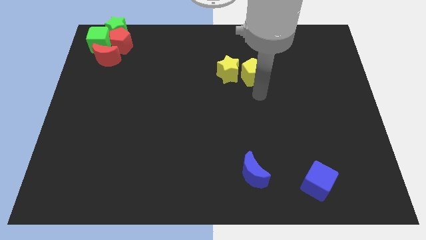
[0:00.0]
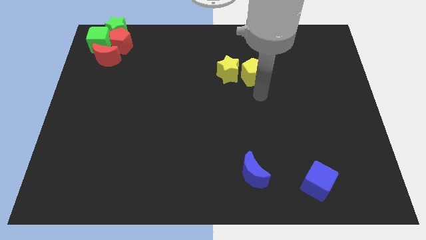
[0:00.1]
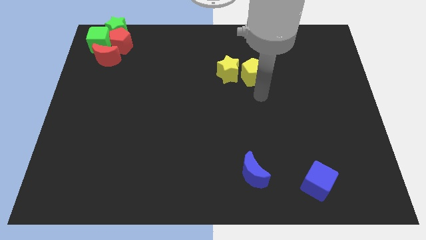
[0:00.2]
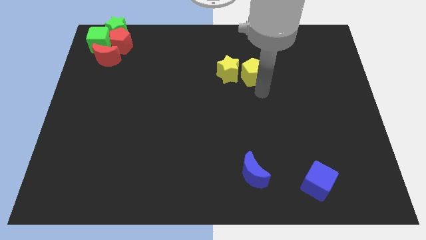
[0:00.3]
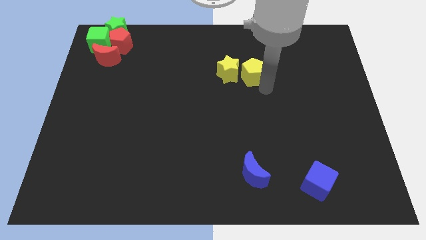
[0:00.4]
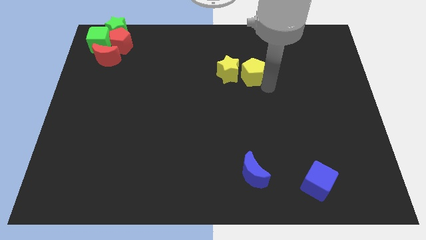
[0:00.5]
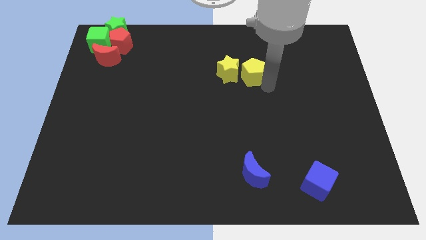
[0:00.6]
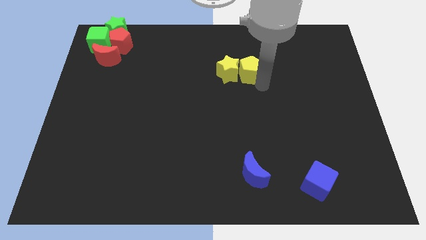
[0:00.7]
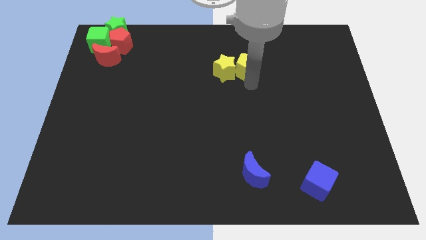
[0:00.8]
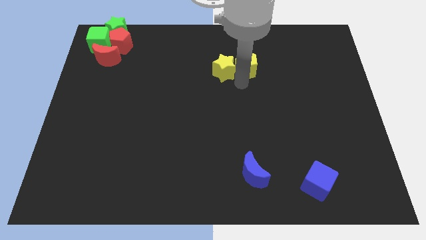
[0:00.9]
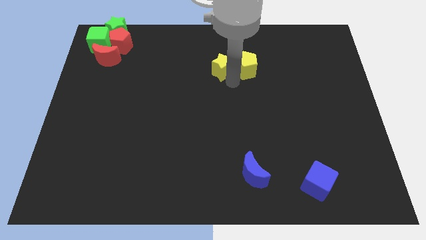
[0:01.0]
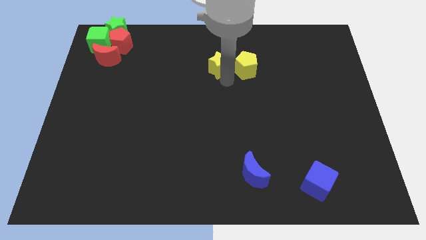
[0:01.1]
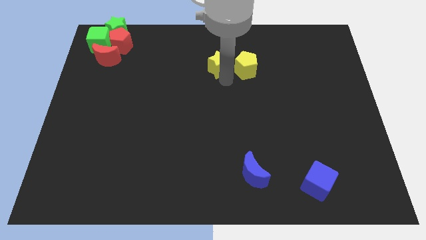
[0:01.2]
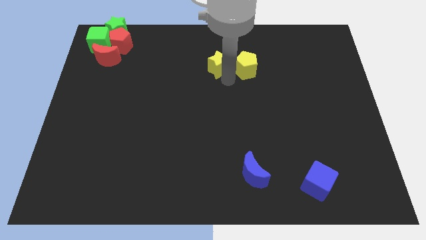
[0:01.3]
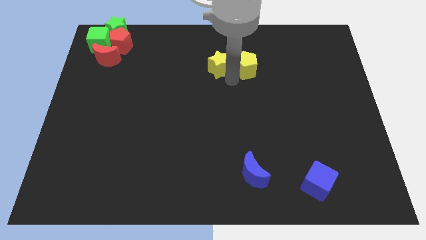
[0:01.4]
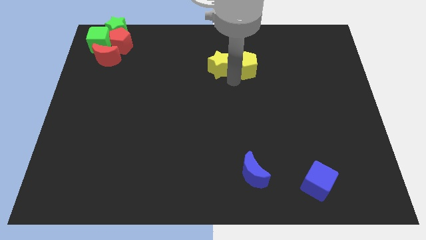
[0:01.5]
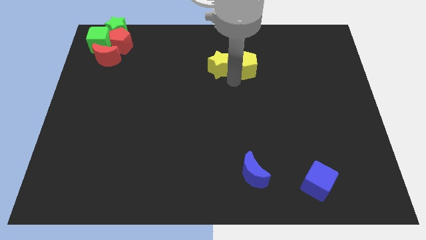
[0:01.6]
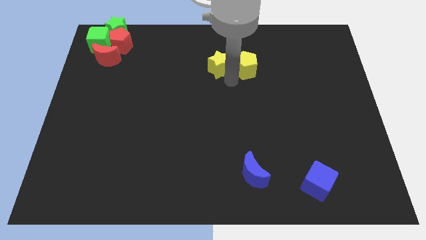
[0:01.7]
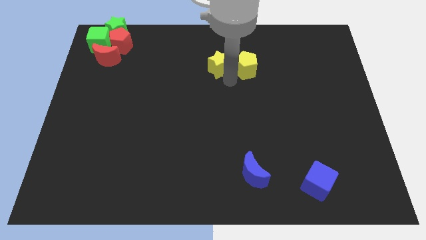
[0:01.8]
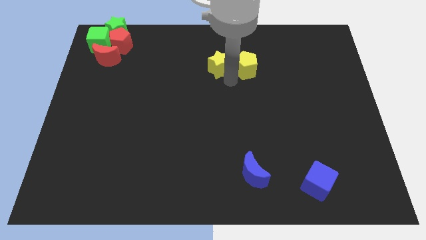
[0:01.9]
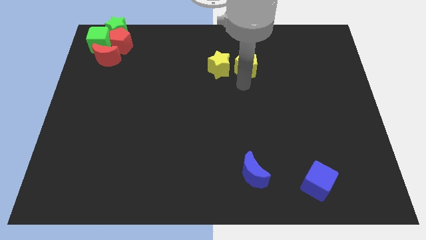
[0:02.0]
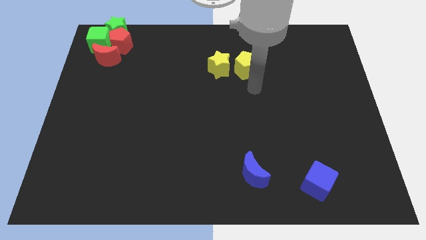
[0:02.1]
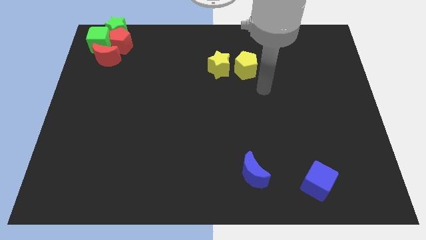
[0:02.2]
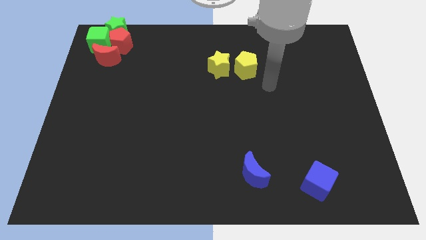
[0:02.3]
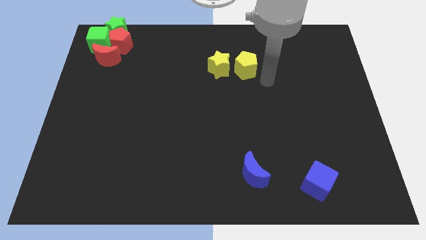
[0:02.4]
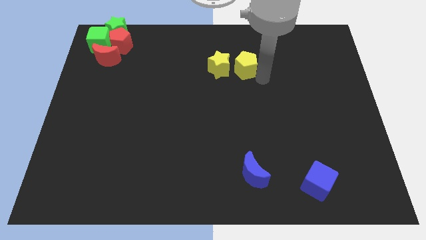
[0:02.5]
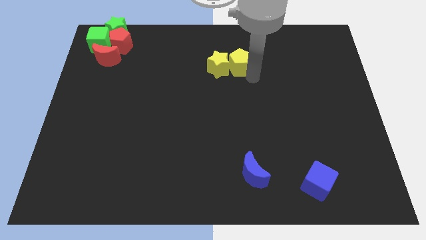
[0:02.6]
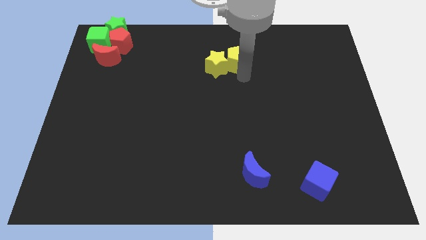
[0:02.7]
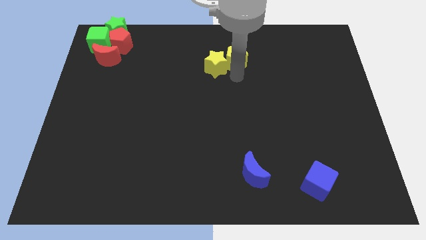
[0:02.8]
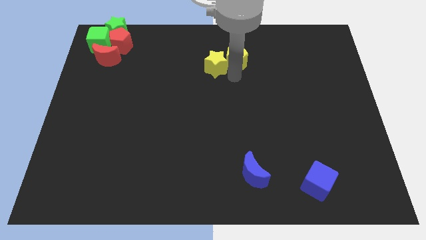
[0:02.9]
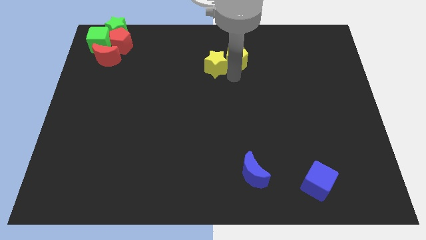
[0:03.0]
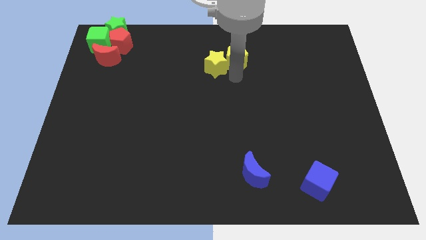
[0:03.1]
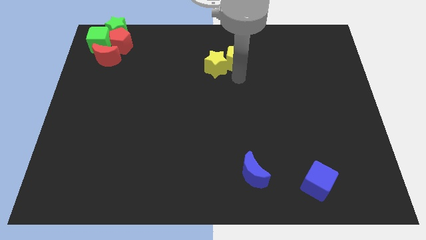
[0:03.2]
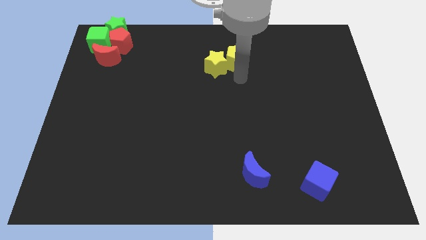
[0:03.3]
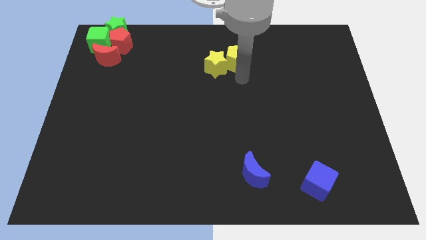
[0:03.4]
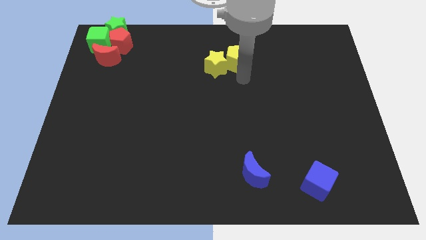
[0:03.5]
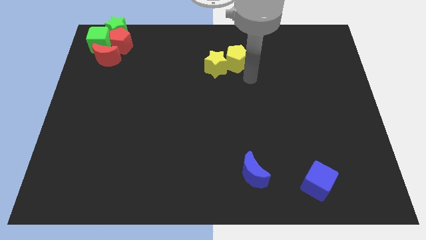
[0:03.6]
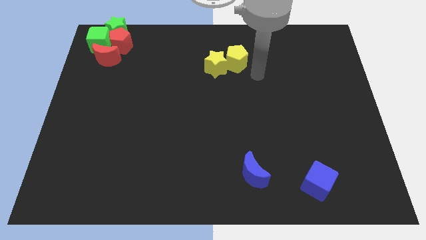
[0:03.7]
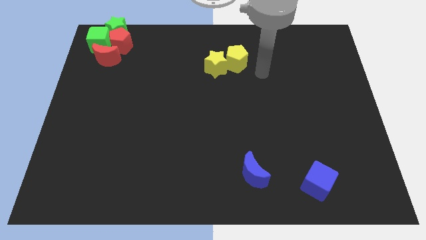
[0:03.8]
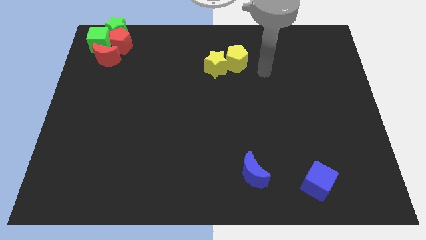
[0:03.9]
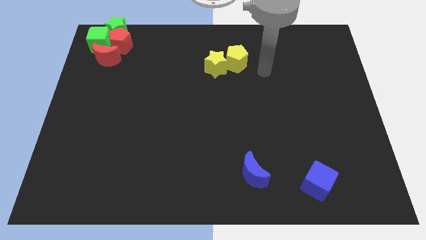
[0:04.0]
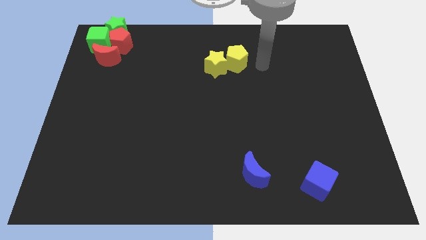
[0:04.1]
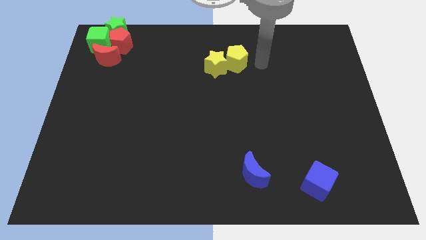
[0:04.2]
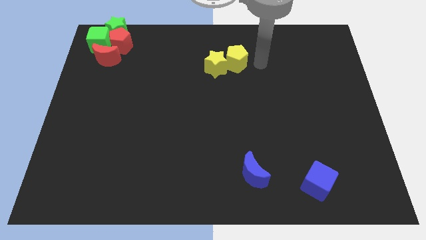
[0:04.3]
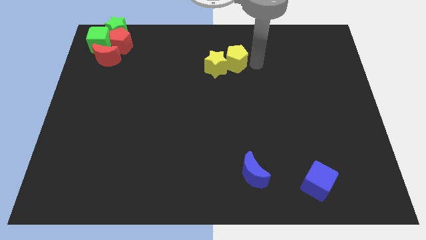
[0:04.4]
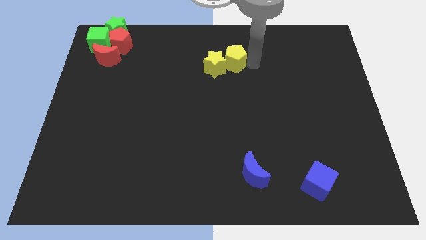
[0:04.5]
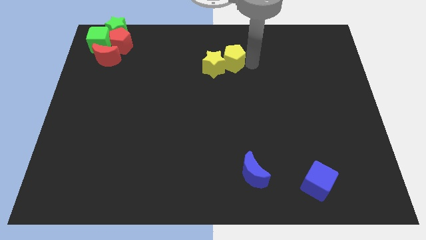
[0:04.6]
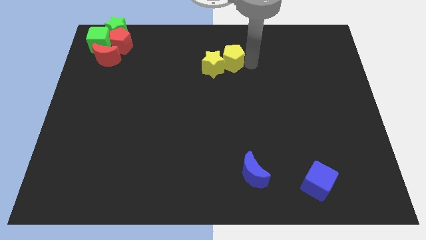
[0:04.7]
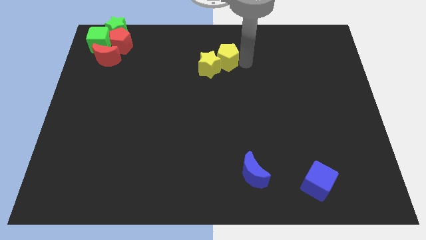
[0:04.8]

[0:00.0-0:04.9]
push both the yellow blocks towards the top center of the board

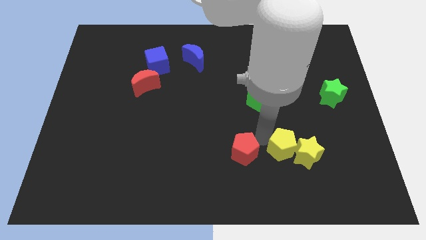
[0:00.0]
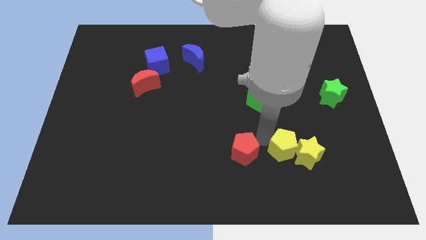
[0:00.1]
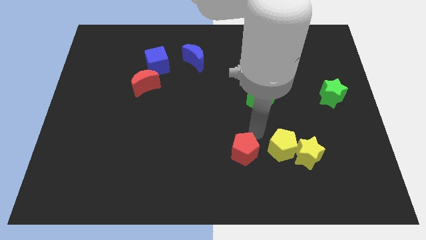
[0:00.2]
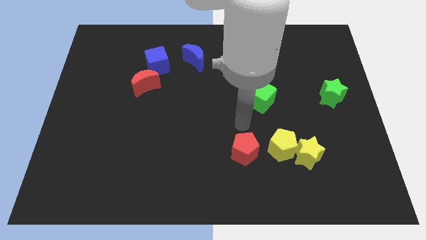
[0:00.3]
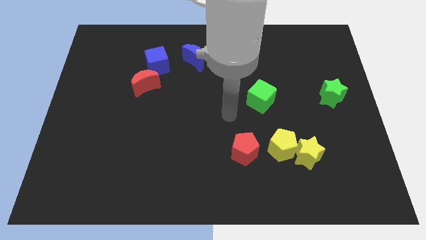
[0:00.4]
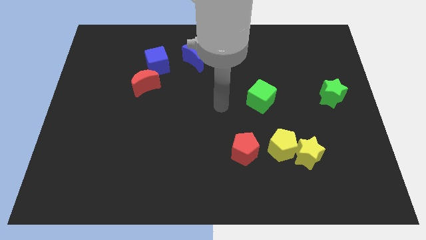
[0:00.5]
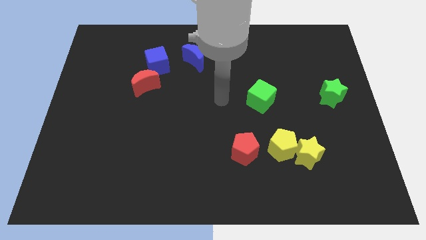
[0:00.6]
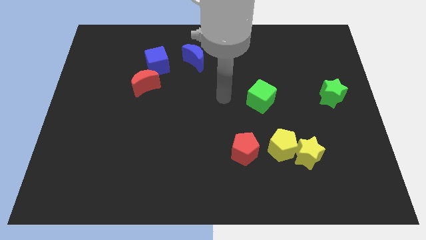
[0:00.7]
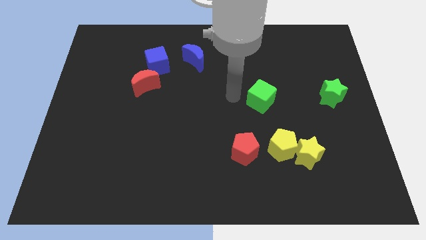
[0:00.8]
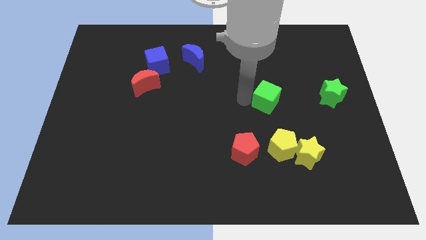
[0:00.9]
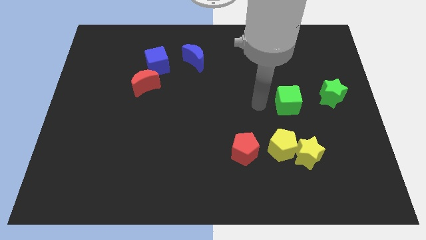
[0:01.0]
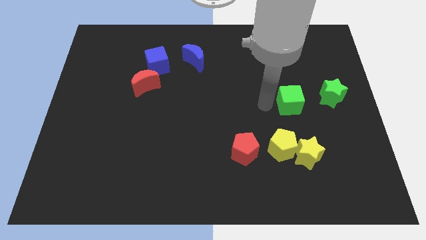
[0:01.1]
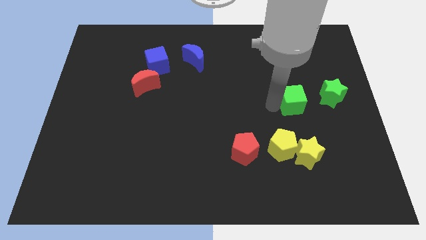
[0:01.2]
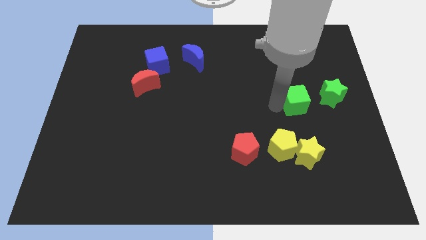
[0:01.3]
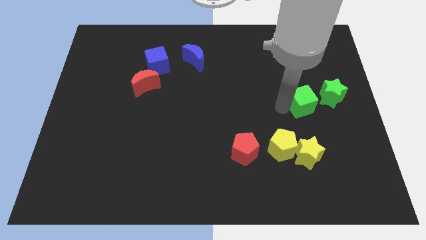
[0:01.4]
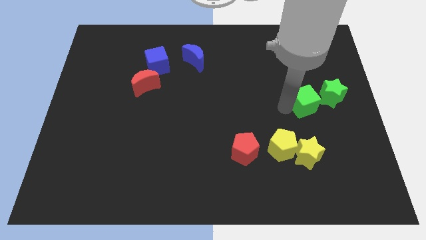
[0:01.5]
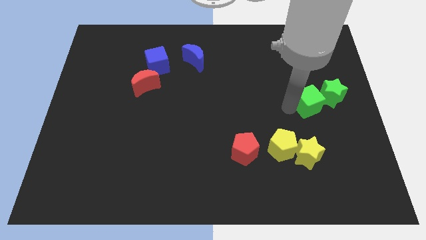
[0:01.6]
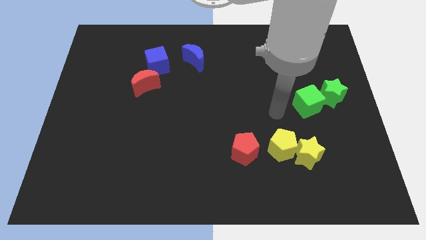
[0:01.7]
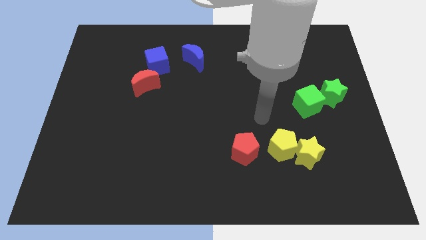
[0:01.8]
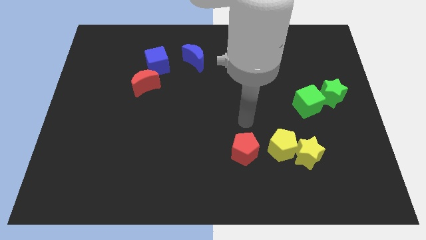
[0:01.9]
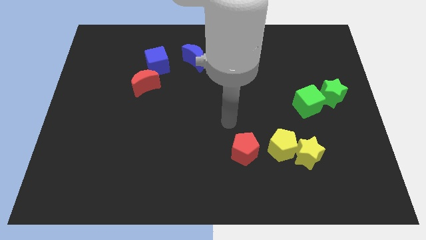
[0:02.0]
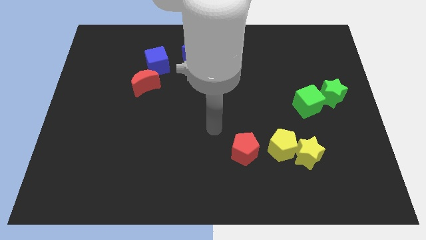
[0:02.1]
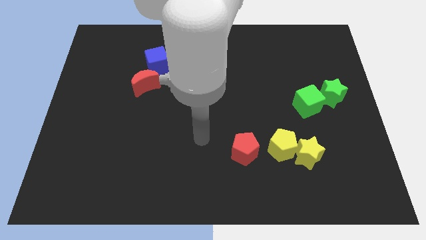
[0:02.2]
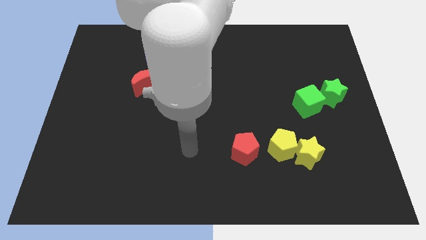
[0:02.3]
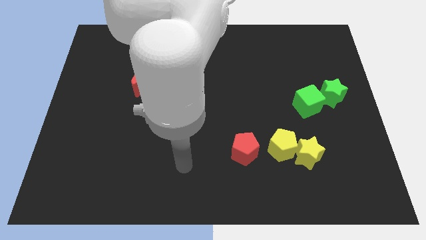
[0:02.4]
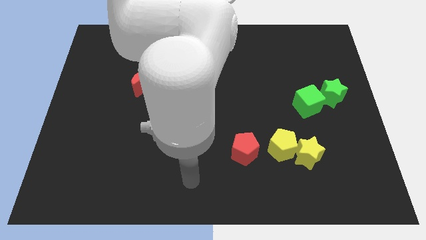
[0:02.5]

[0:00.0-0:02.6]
push the green cube left to the green star

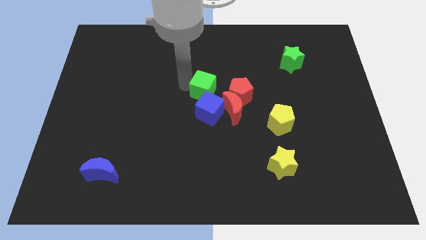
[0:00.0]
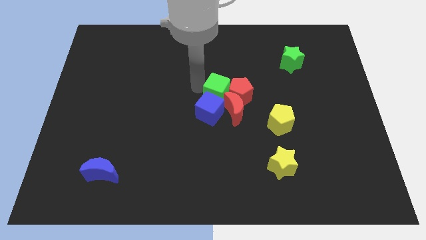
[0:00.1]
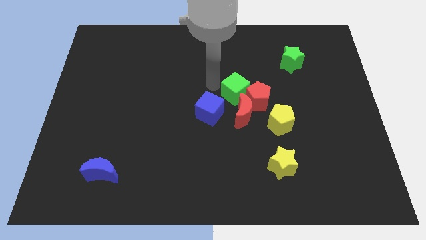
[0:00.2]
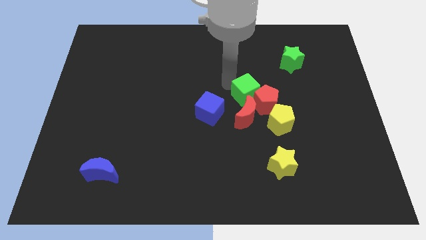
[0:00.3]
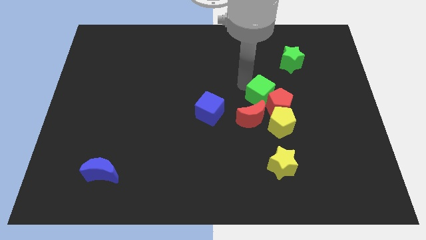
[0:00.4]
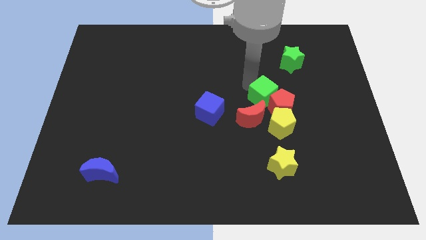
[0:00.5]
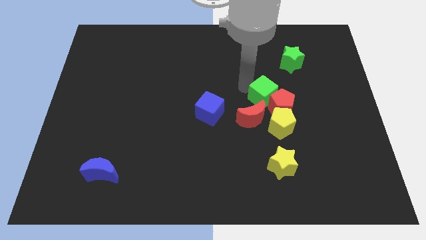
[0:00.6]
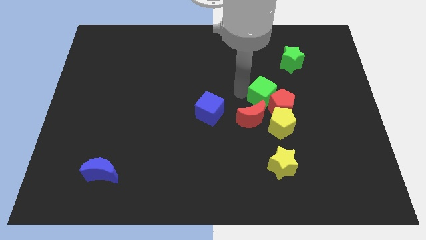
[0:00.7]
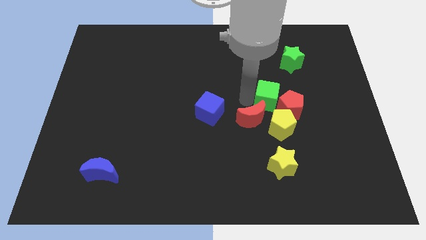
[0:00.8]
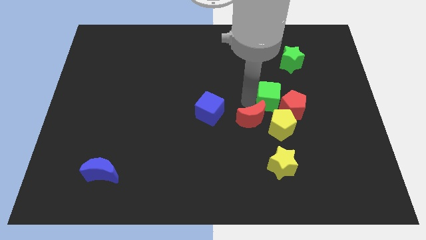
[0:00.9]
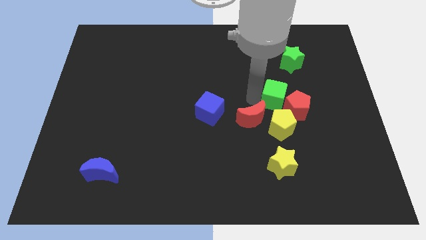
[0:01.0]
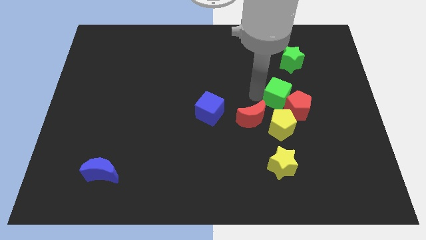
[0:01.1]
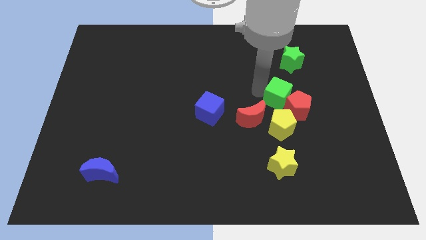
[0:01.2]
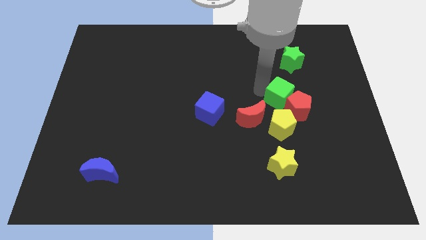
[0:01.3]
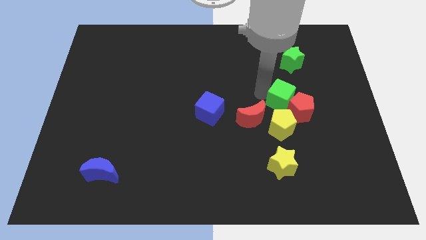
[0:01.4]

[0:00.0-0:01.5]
push the green cube into the red pentagon
